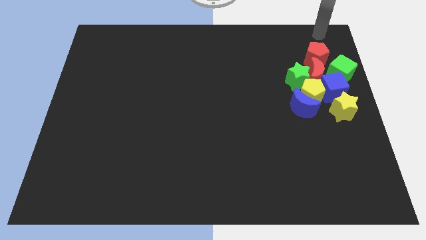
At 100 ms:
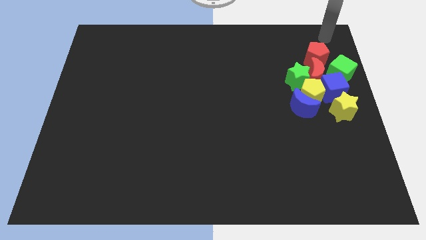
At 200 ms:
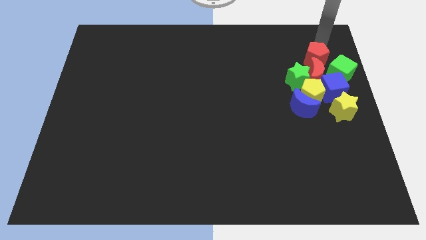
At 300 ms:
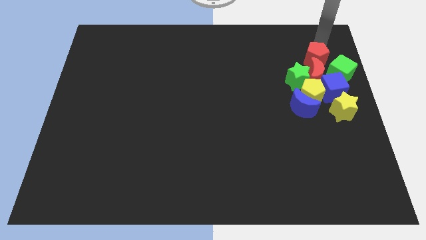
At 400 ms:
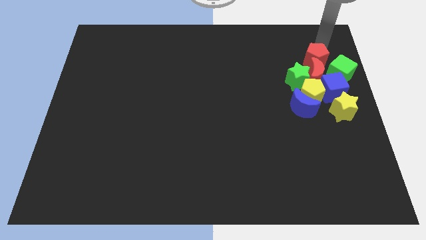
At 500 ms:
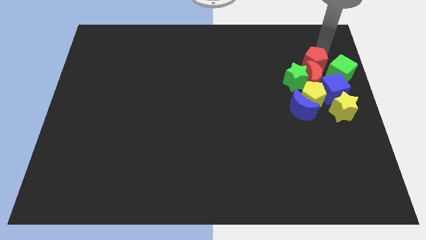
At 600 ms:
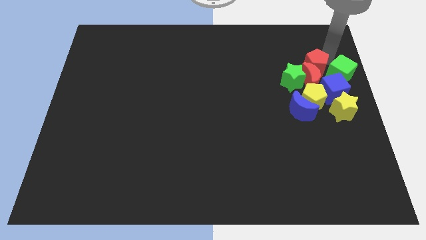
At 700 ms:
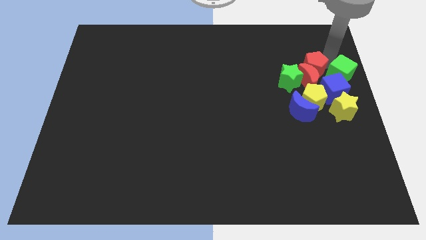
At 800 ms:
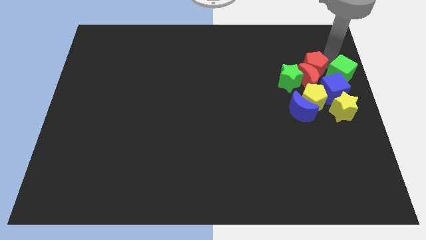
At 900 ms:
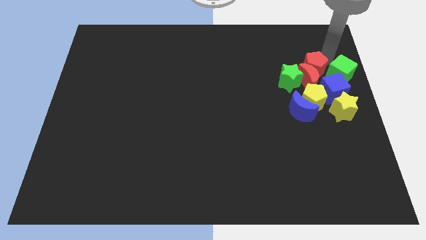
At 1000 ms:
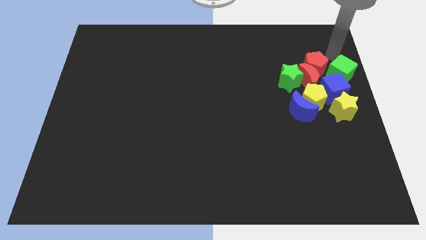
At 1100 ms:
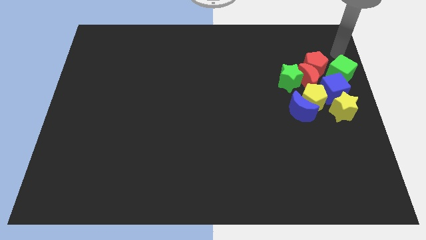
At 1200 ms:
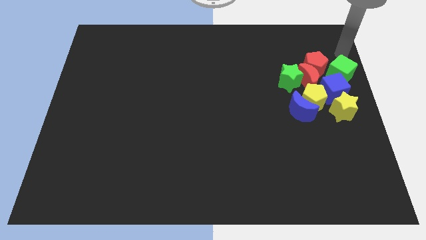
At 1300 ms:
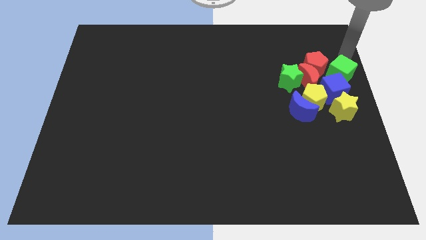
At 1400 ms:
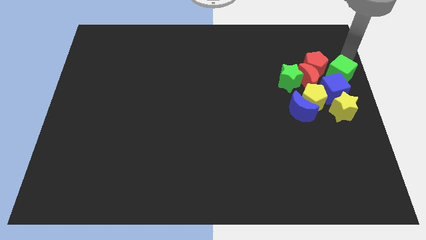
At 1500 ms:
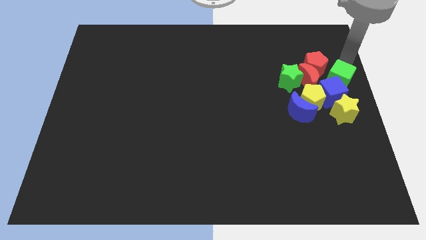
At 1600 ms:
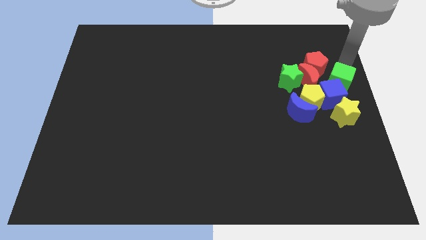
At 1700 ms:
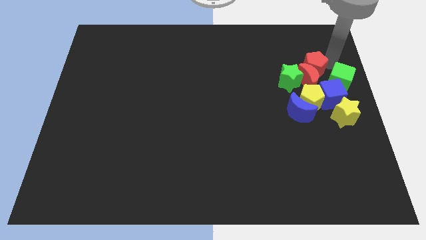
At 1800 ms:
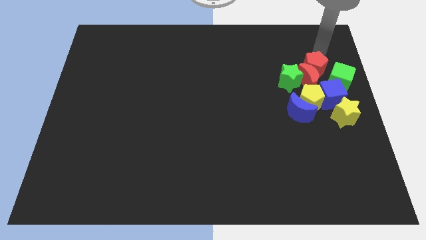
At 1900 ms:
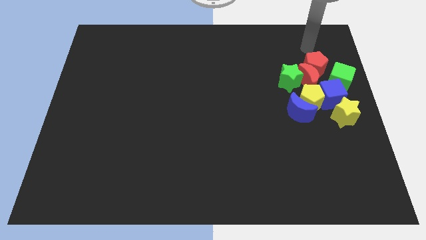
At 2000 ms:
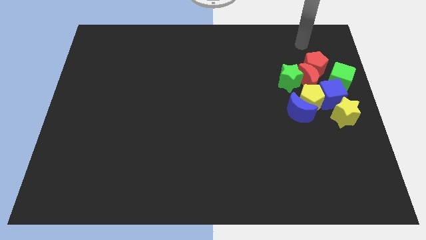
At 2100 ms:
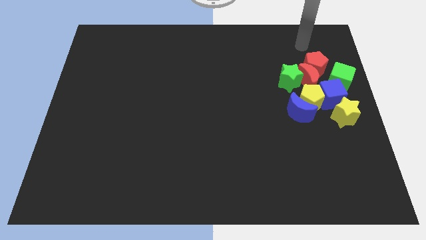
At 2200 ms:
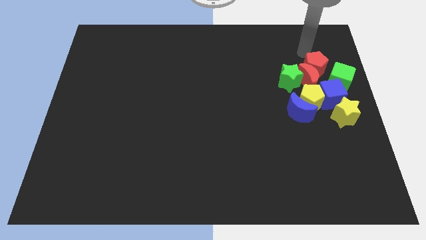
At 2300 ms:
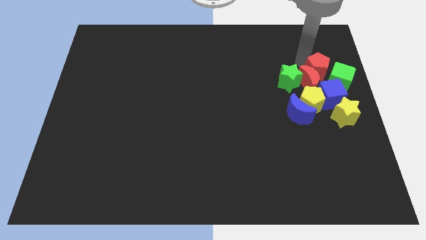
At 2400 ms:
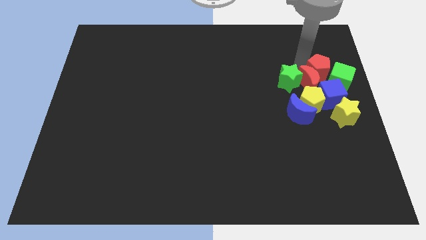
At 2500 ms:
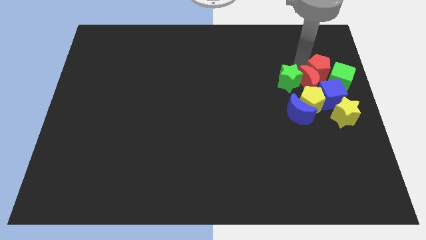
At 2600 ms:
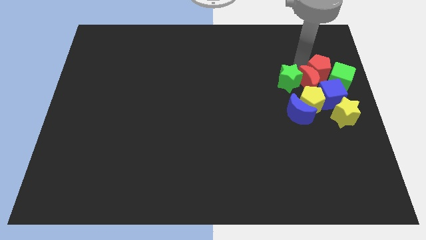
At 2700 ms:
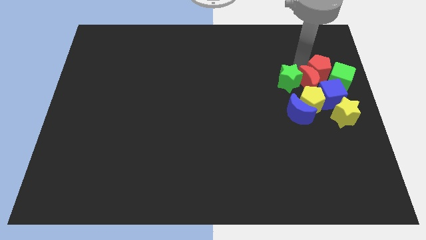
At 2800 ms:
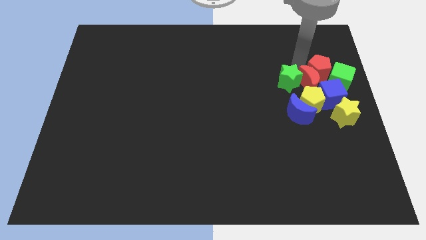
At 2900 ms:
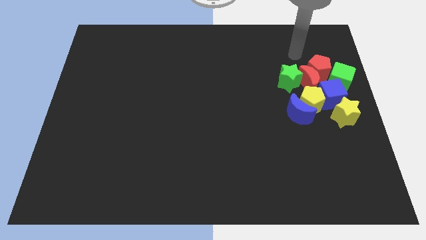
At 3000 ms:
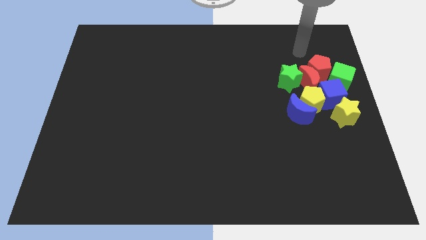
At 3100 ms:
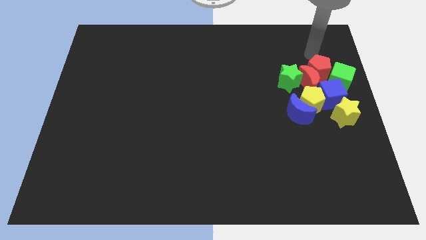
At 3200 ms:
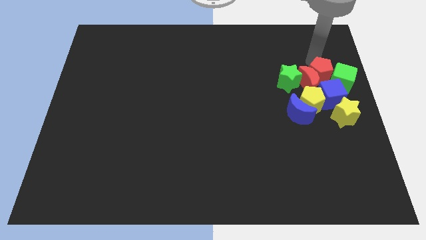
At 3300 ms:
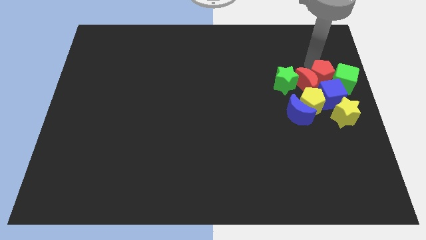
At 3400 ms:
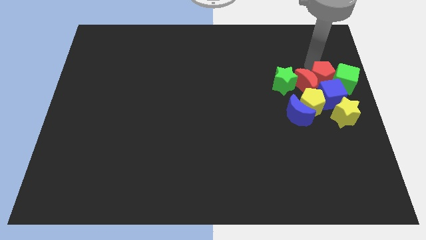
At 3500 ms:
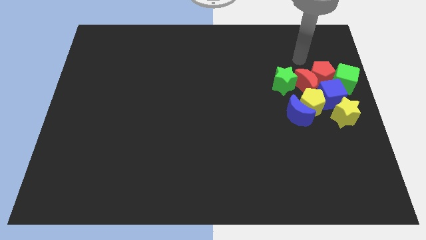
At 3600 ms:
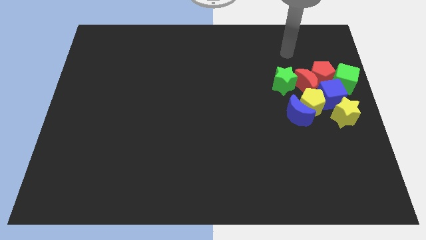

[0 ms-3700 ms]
adjust the group of blocks at the right center of the board

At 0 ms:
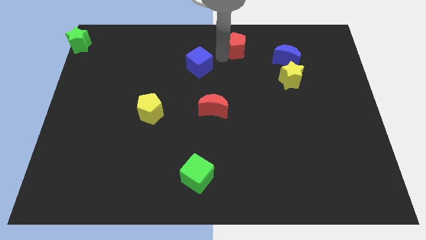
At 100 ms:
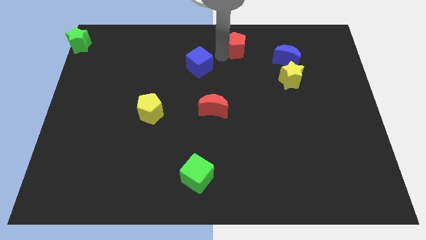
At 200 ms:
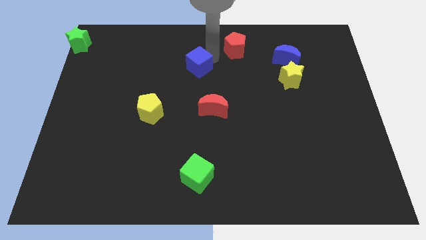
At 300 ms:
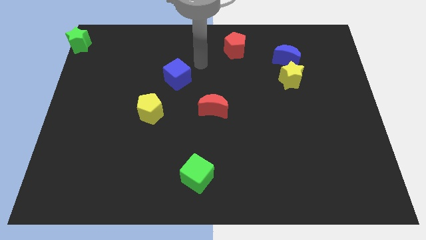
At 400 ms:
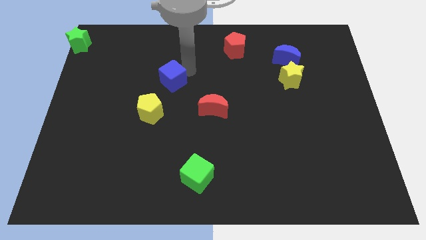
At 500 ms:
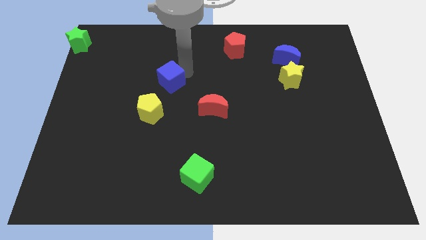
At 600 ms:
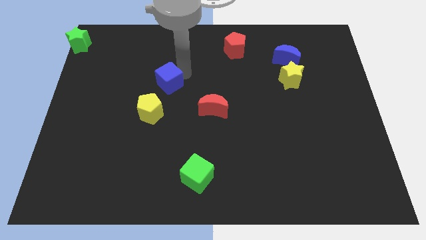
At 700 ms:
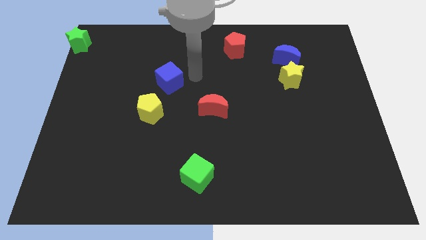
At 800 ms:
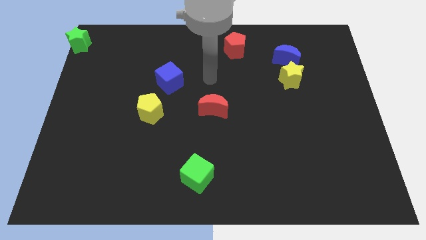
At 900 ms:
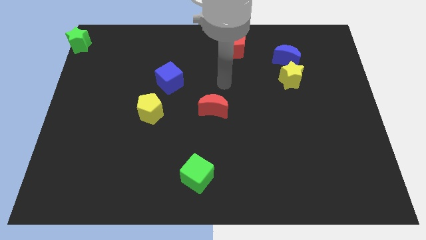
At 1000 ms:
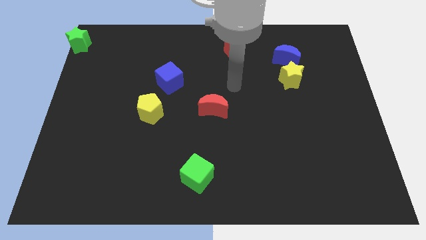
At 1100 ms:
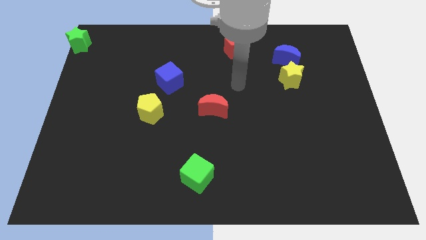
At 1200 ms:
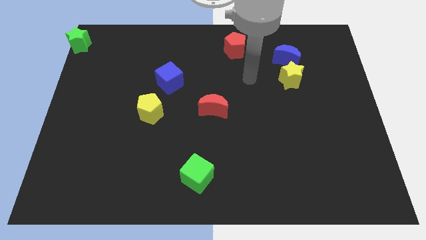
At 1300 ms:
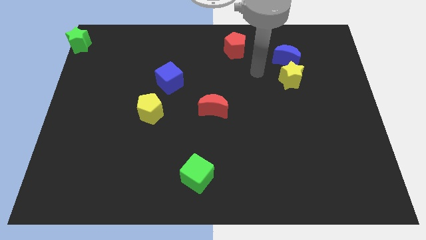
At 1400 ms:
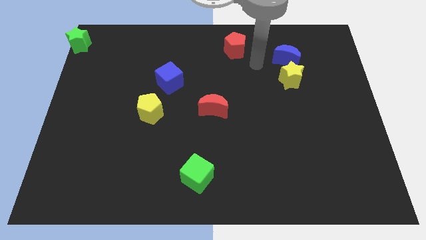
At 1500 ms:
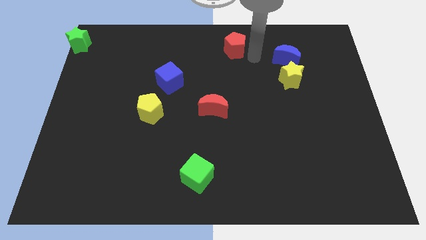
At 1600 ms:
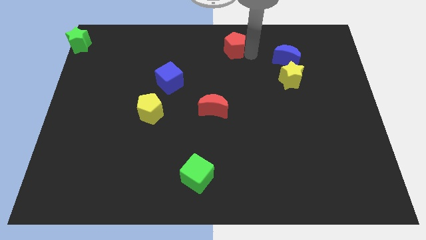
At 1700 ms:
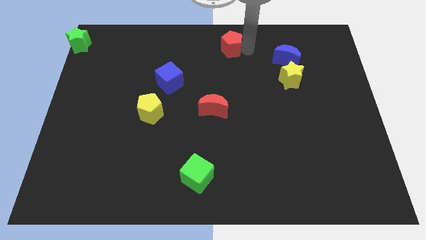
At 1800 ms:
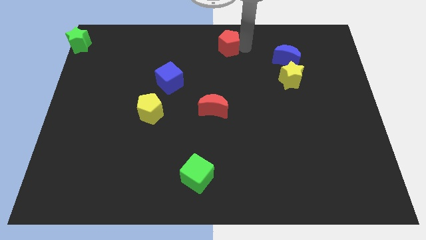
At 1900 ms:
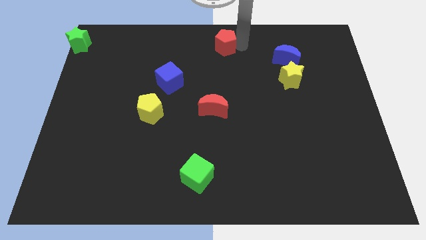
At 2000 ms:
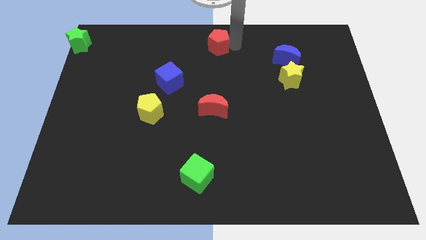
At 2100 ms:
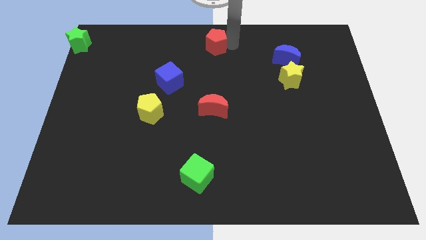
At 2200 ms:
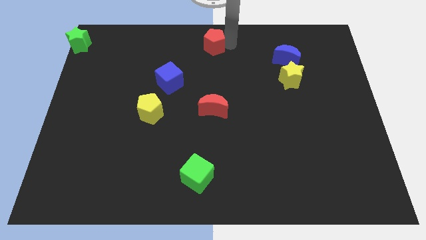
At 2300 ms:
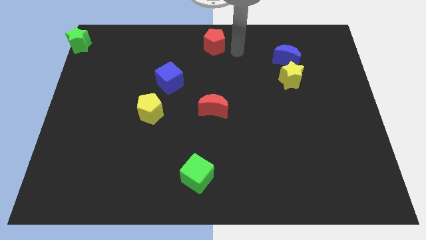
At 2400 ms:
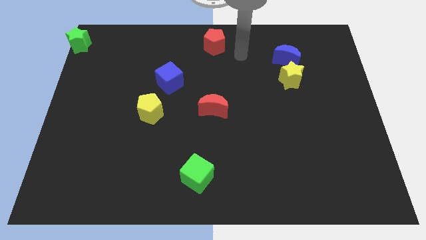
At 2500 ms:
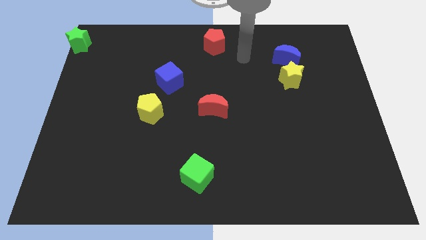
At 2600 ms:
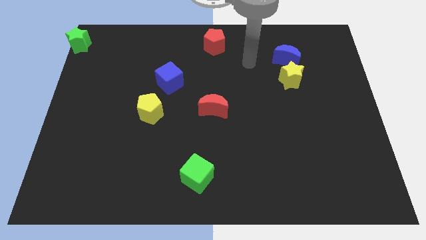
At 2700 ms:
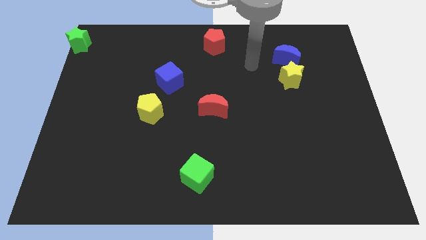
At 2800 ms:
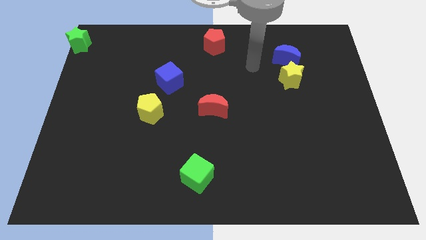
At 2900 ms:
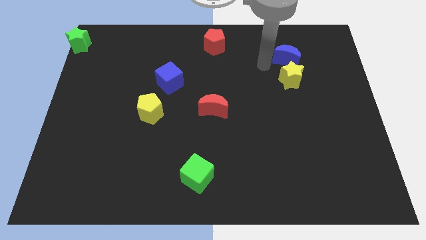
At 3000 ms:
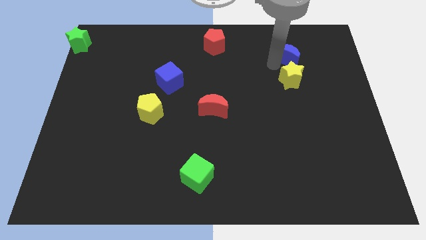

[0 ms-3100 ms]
place the red pentagon at the top center of the board

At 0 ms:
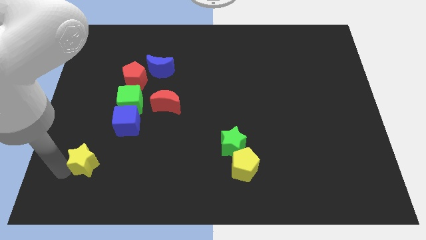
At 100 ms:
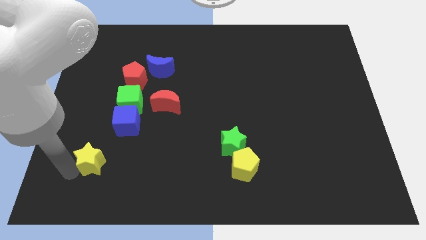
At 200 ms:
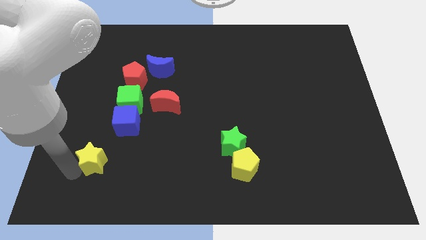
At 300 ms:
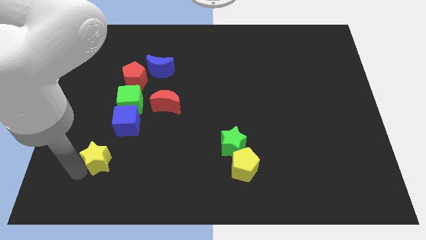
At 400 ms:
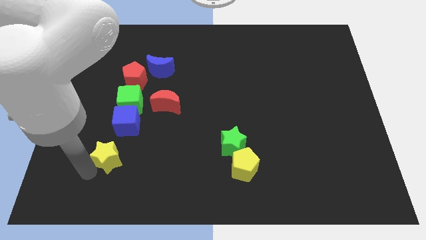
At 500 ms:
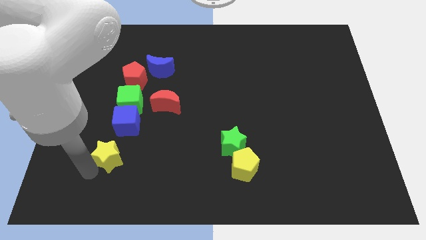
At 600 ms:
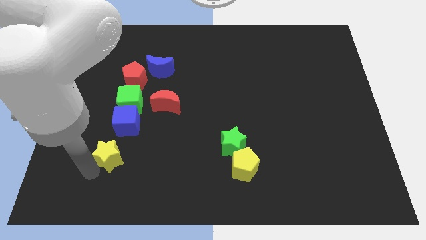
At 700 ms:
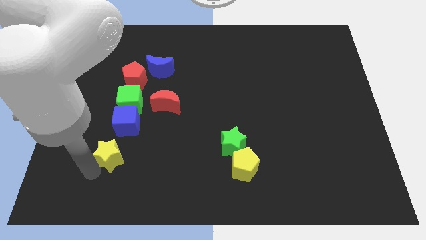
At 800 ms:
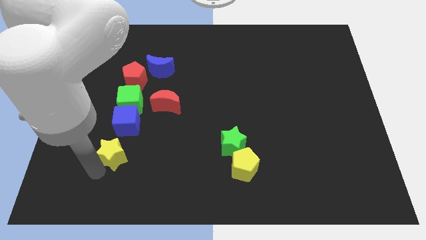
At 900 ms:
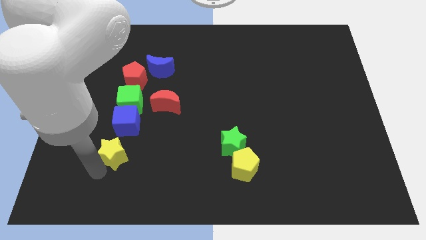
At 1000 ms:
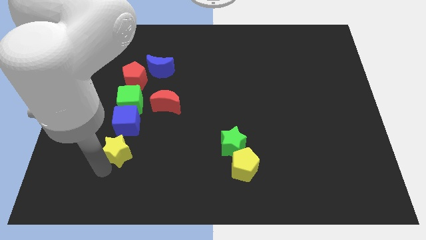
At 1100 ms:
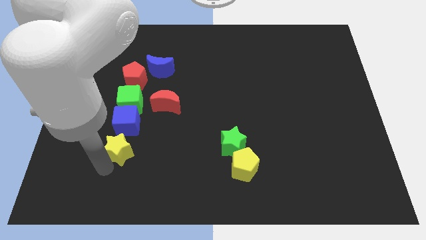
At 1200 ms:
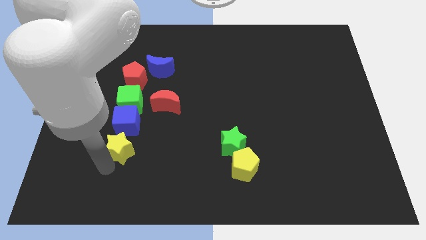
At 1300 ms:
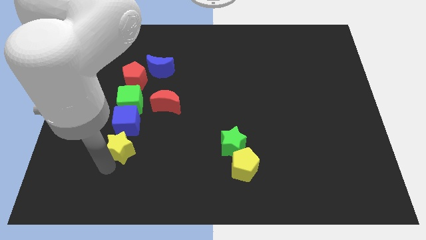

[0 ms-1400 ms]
place yellow star below the blue cube

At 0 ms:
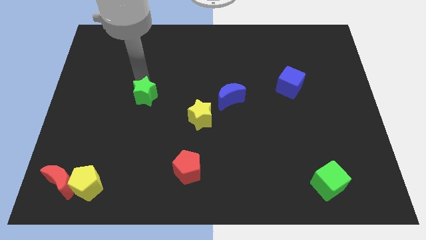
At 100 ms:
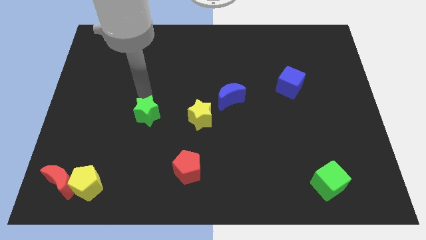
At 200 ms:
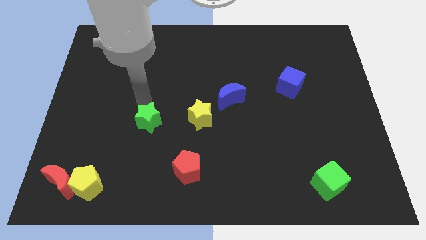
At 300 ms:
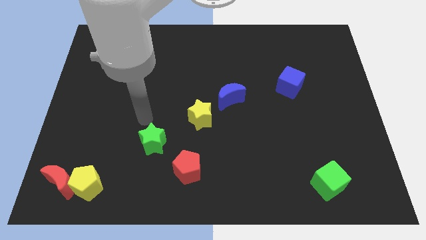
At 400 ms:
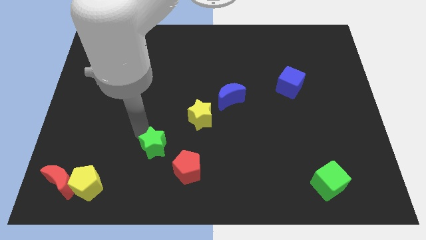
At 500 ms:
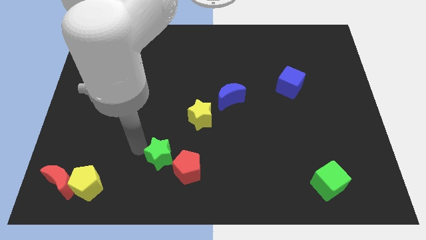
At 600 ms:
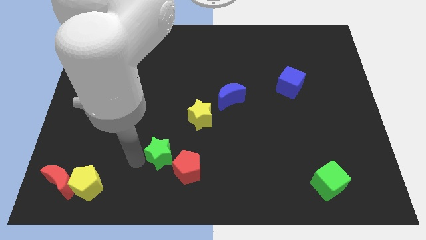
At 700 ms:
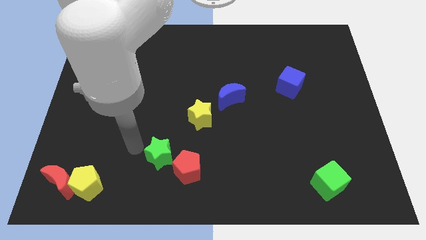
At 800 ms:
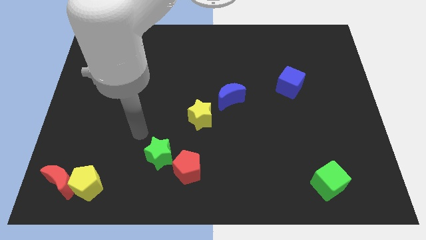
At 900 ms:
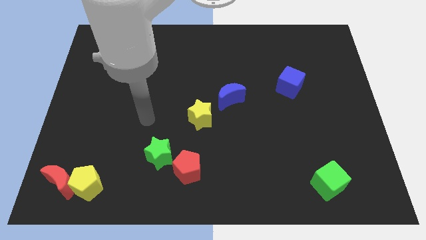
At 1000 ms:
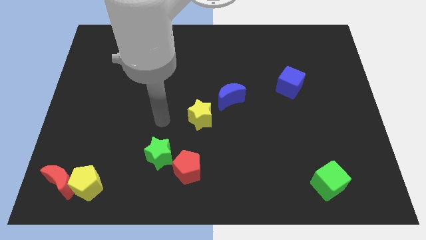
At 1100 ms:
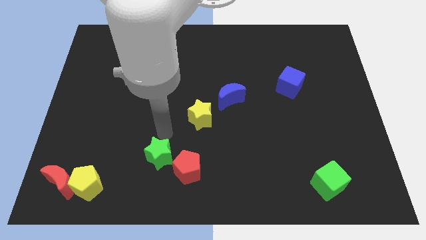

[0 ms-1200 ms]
move the green star diagonally to the top left of the red pentagon
